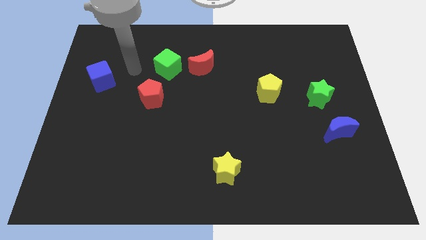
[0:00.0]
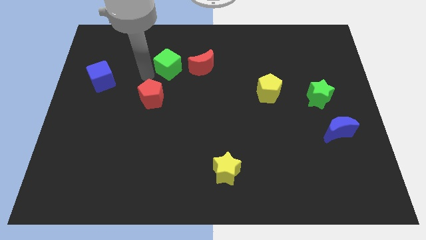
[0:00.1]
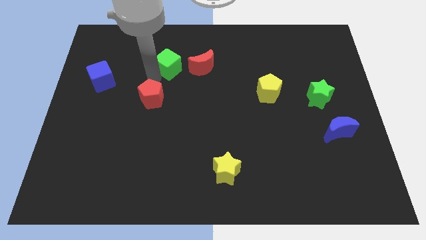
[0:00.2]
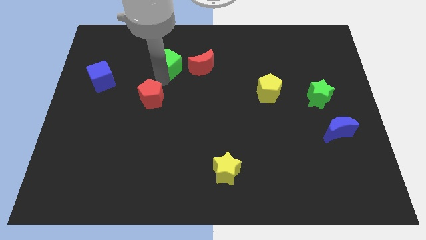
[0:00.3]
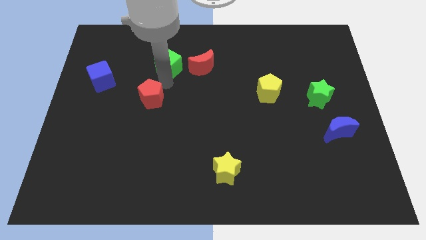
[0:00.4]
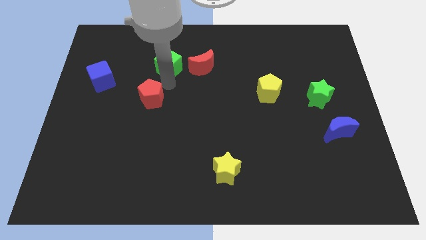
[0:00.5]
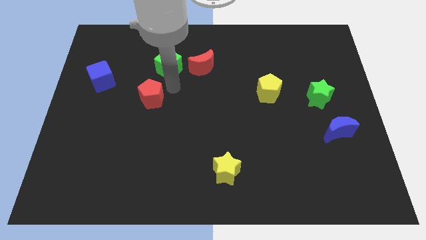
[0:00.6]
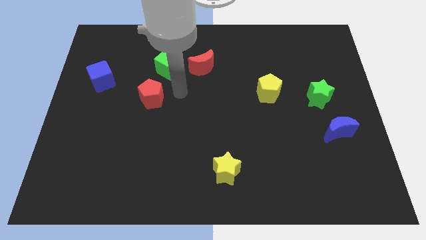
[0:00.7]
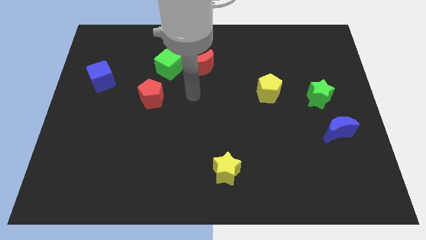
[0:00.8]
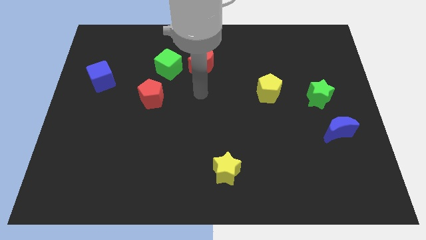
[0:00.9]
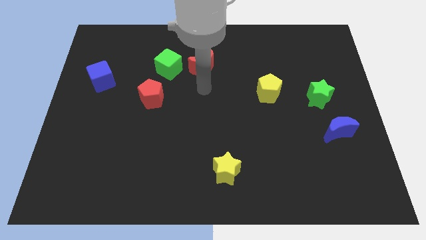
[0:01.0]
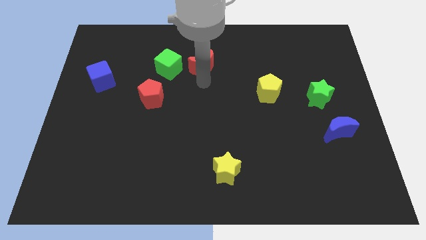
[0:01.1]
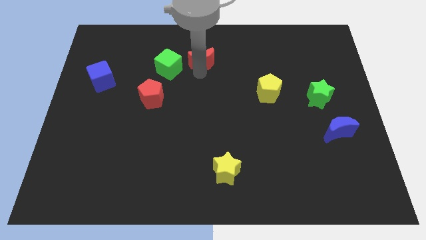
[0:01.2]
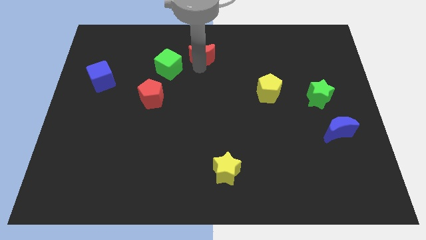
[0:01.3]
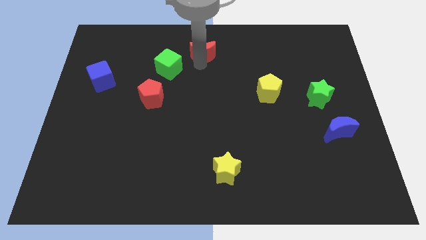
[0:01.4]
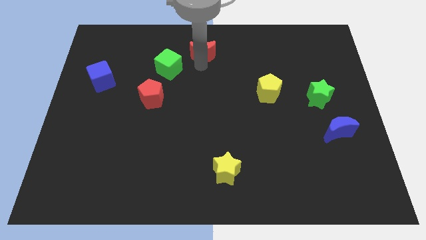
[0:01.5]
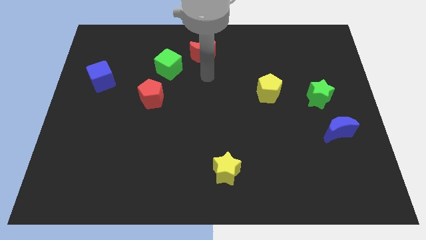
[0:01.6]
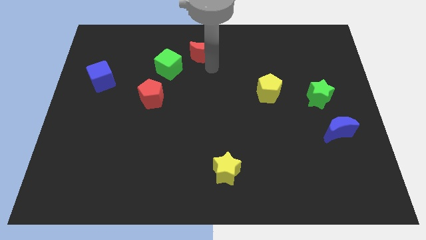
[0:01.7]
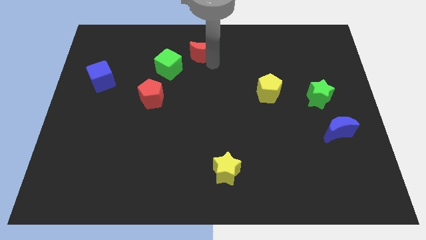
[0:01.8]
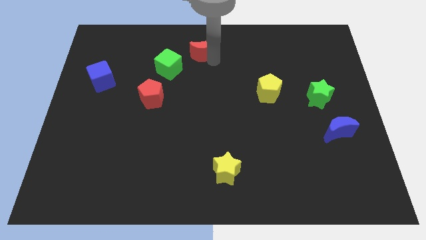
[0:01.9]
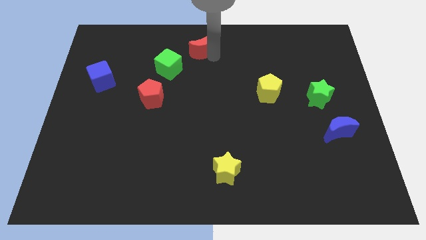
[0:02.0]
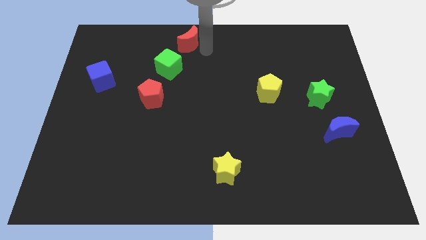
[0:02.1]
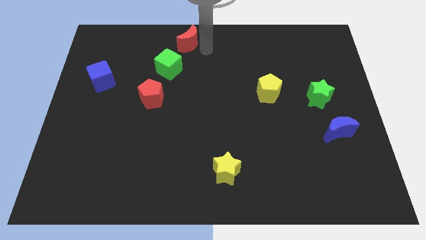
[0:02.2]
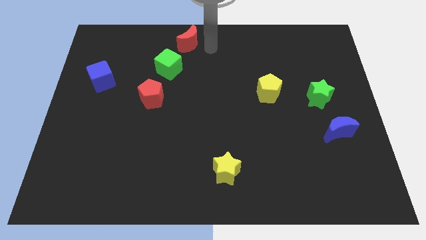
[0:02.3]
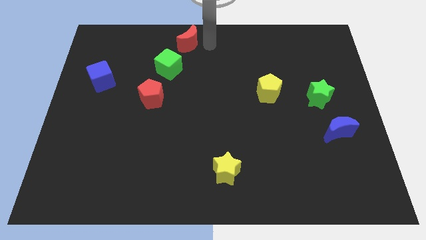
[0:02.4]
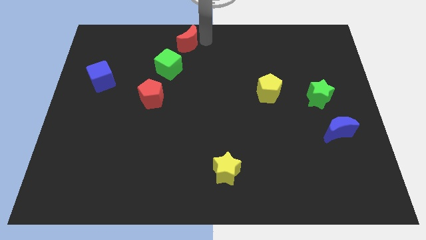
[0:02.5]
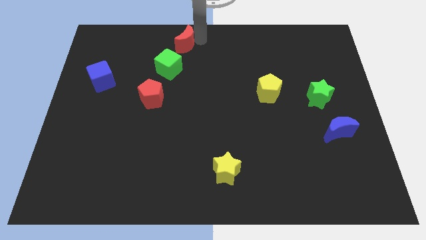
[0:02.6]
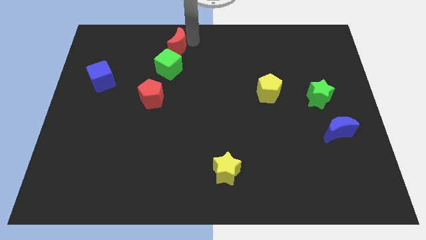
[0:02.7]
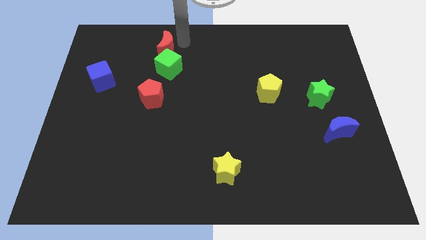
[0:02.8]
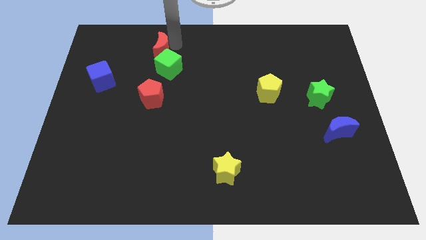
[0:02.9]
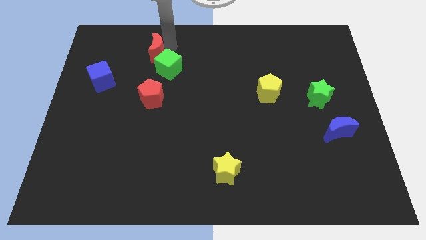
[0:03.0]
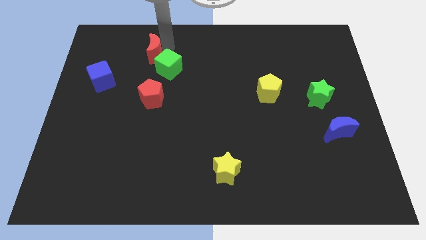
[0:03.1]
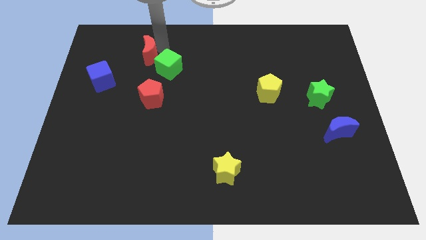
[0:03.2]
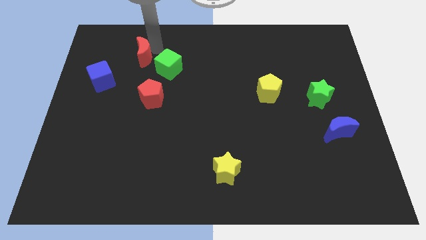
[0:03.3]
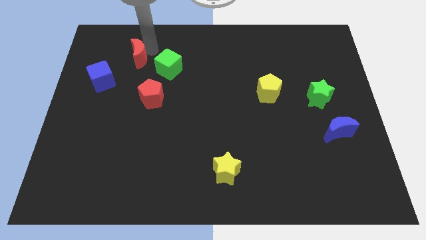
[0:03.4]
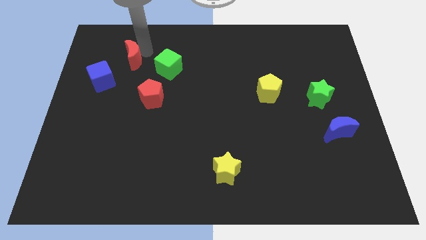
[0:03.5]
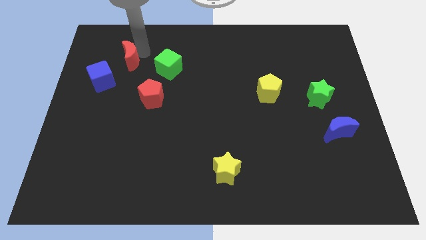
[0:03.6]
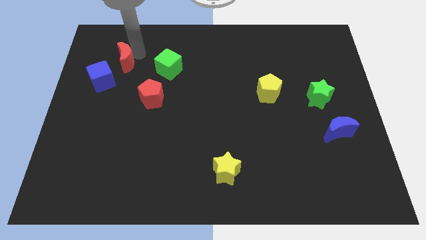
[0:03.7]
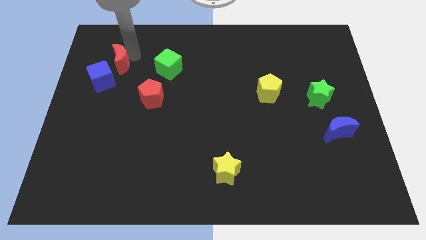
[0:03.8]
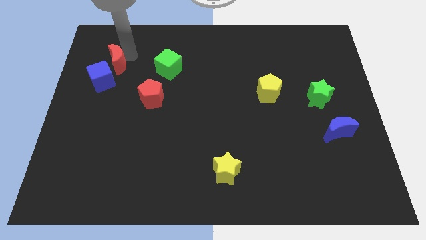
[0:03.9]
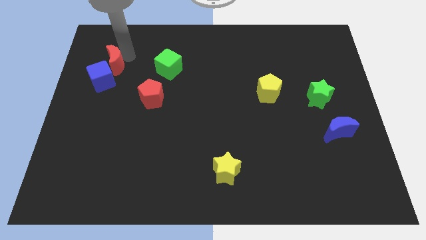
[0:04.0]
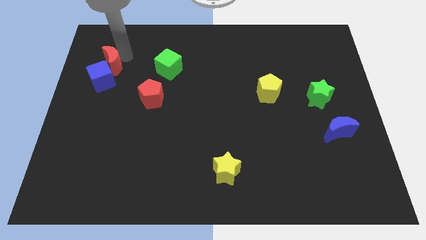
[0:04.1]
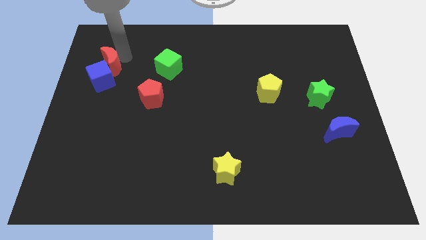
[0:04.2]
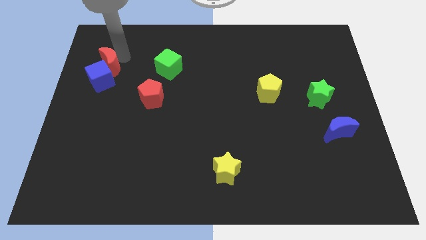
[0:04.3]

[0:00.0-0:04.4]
move the red moon next to the blue cube

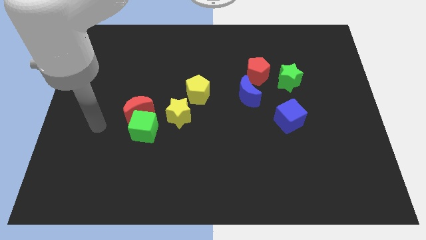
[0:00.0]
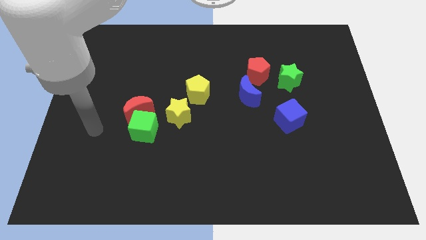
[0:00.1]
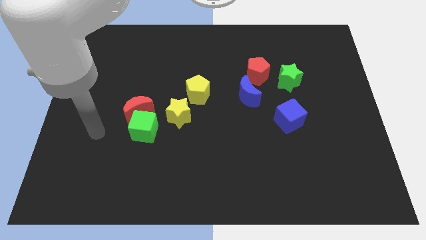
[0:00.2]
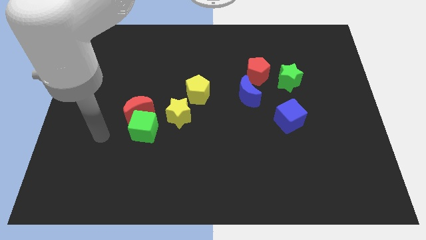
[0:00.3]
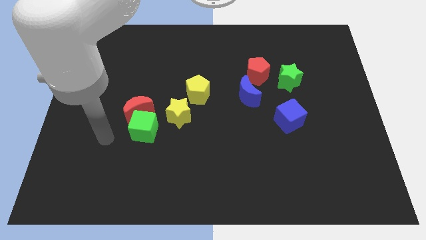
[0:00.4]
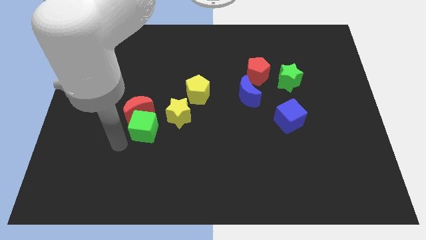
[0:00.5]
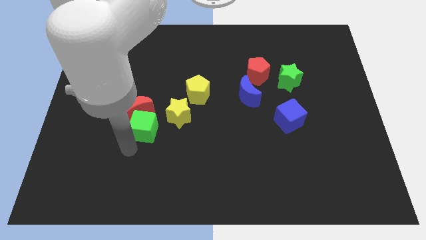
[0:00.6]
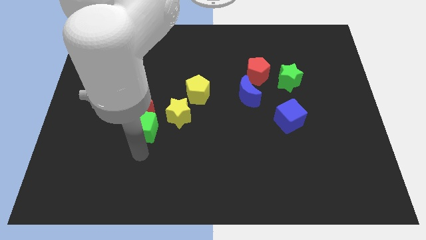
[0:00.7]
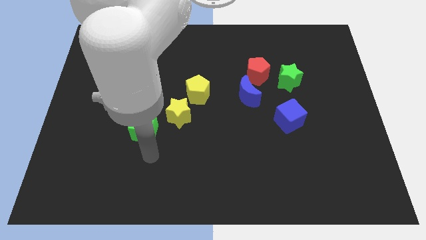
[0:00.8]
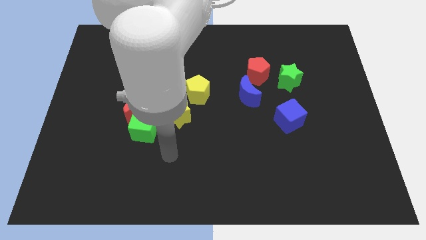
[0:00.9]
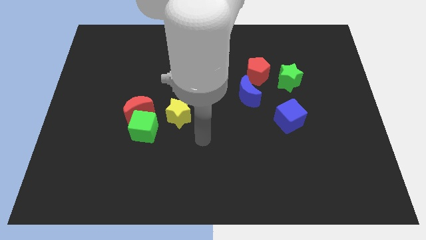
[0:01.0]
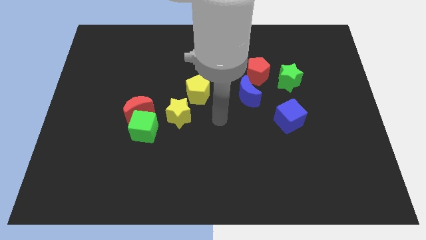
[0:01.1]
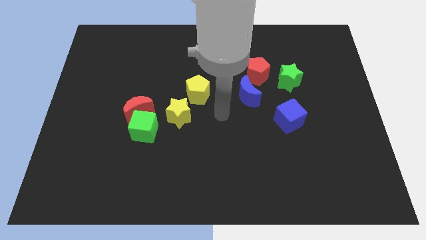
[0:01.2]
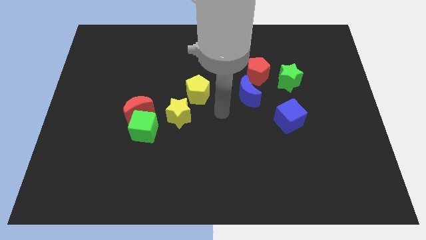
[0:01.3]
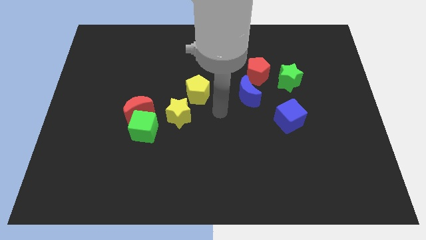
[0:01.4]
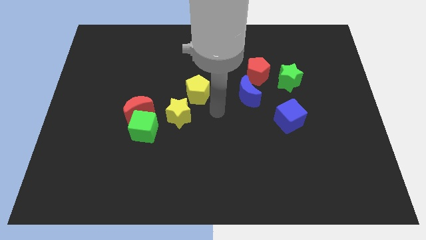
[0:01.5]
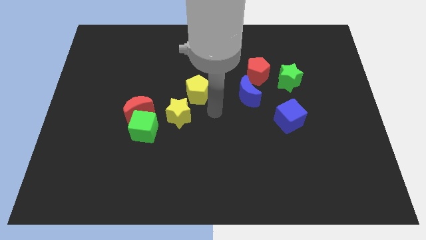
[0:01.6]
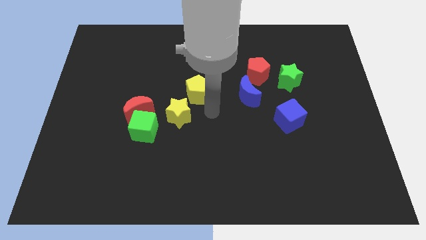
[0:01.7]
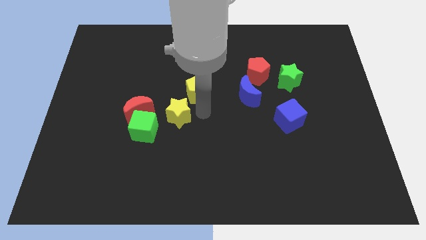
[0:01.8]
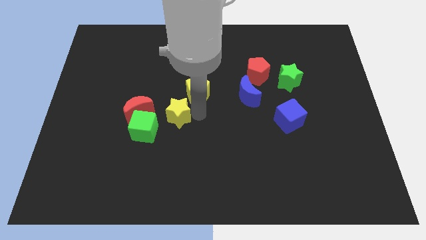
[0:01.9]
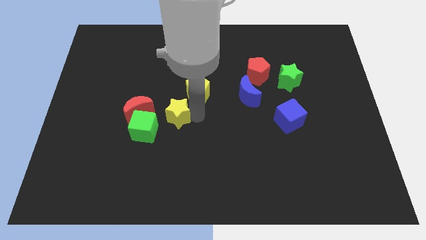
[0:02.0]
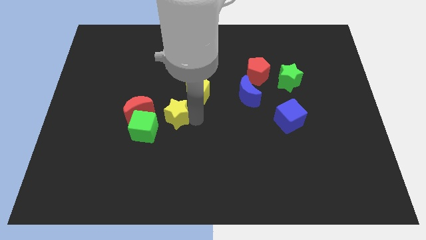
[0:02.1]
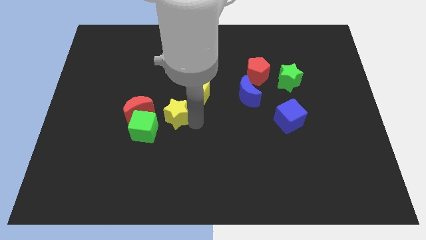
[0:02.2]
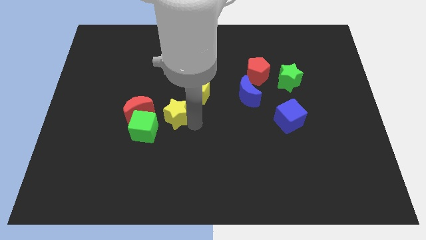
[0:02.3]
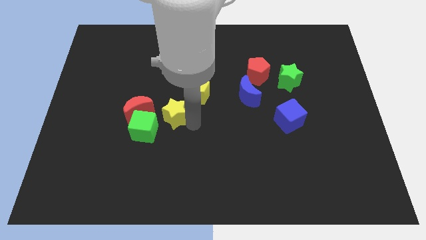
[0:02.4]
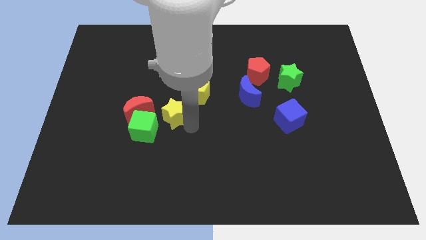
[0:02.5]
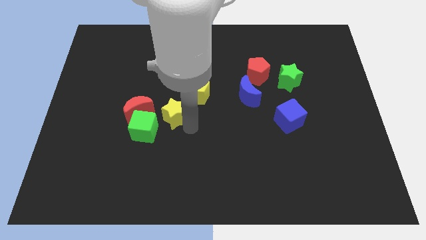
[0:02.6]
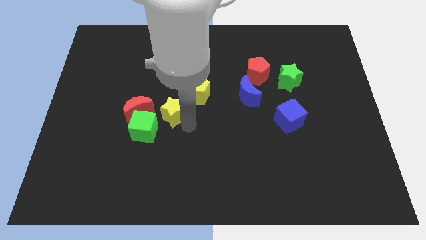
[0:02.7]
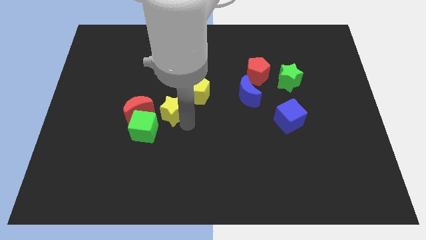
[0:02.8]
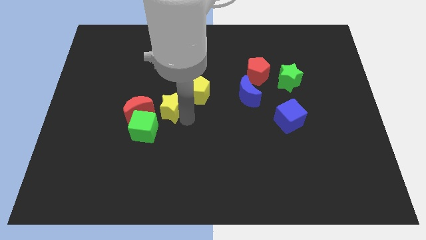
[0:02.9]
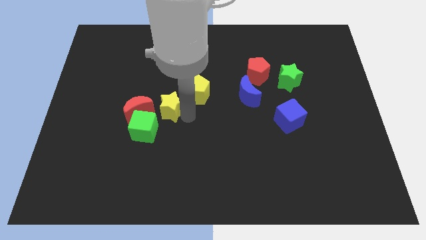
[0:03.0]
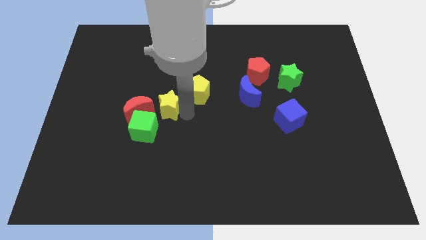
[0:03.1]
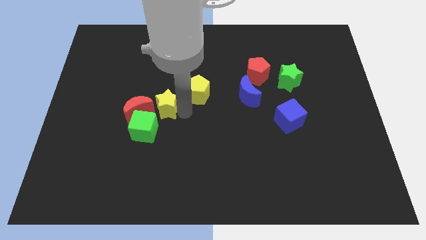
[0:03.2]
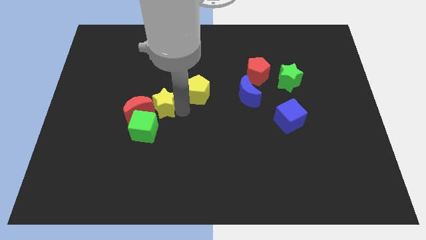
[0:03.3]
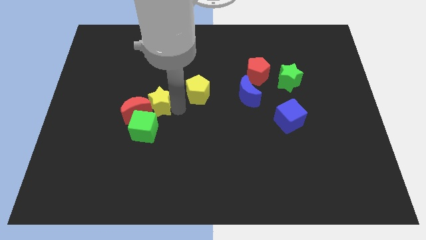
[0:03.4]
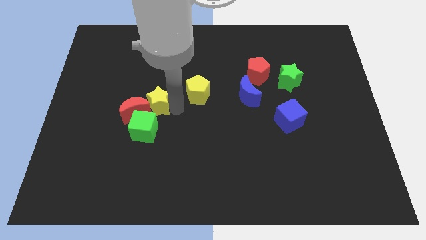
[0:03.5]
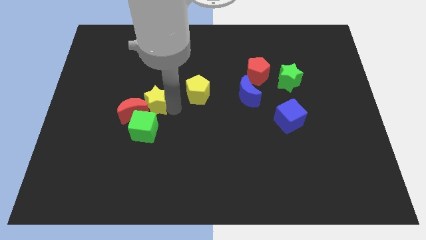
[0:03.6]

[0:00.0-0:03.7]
slide the yellow star to the red moon

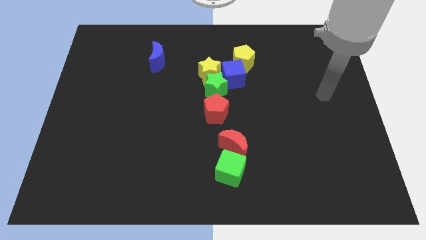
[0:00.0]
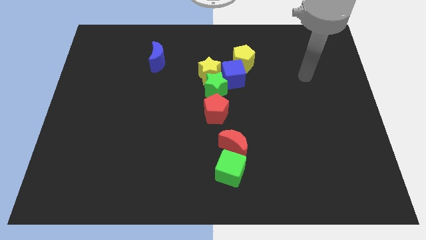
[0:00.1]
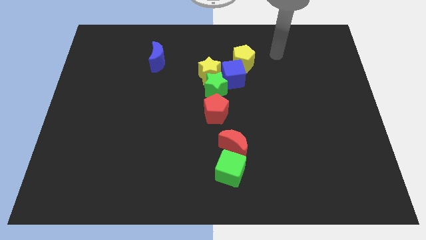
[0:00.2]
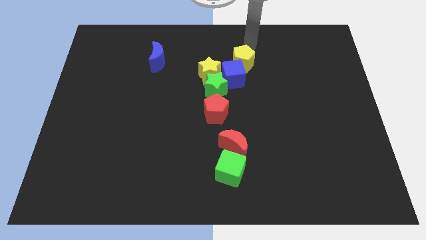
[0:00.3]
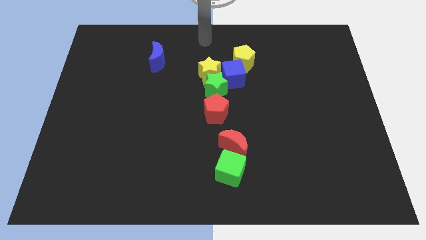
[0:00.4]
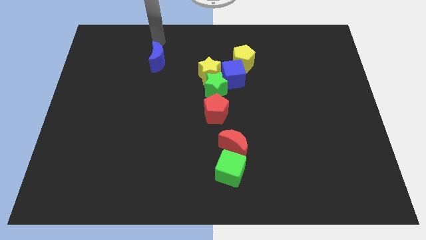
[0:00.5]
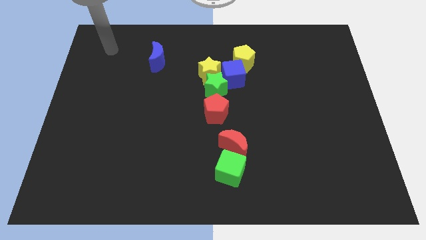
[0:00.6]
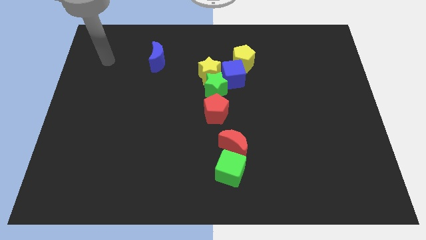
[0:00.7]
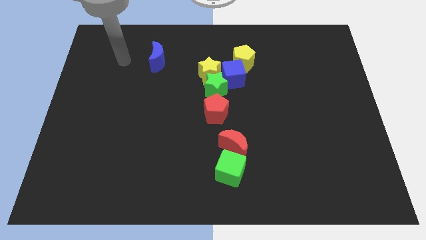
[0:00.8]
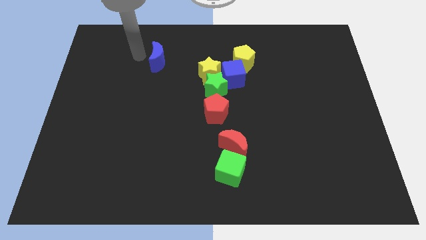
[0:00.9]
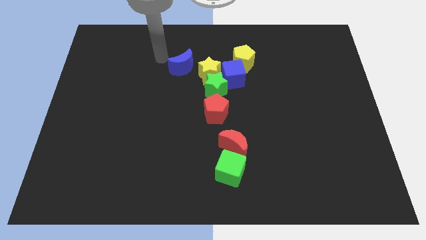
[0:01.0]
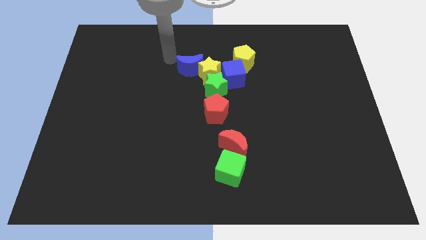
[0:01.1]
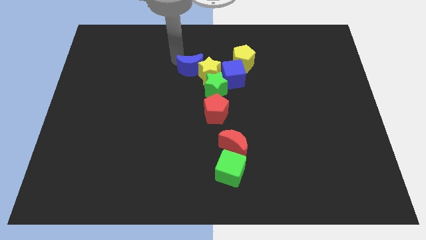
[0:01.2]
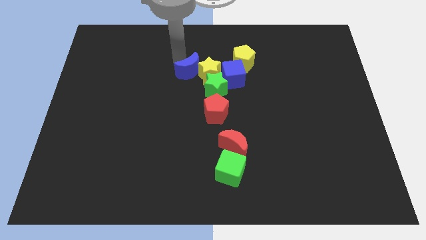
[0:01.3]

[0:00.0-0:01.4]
move the blue moon next to the yellow star
